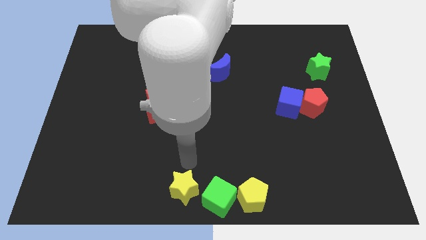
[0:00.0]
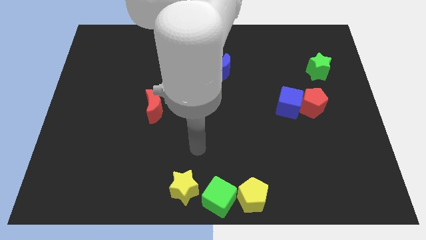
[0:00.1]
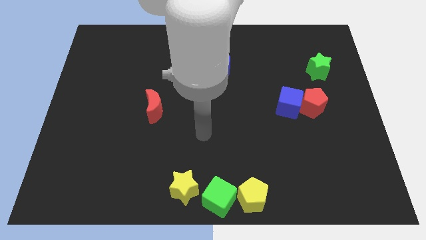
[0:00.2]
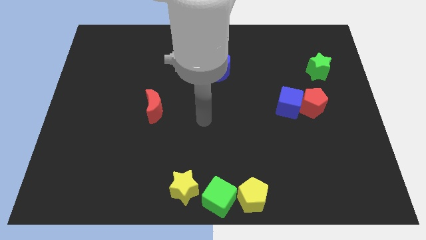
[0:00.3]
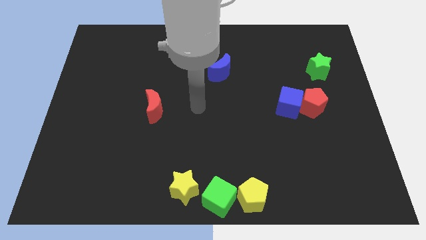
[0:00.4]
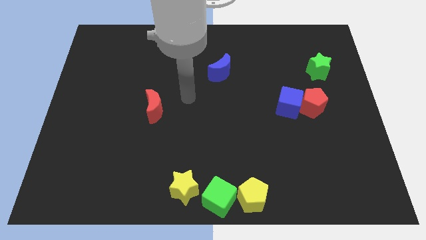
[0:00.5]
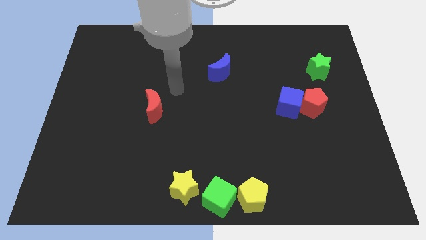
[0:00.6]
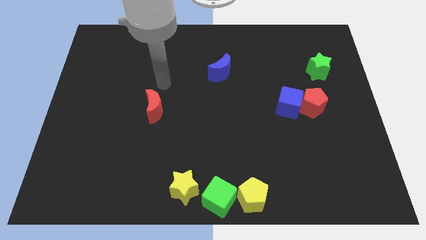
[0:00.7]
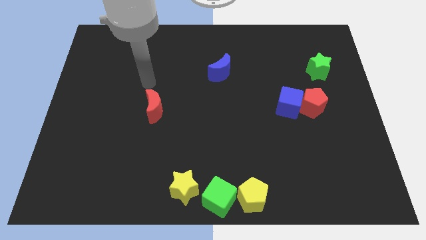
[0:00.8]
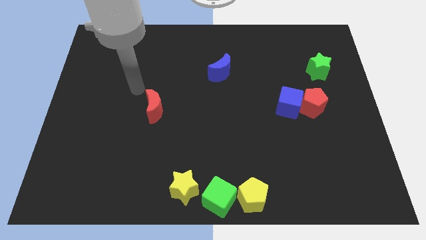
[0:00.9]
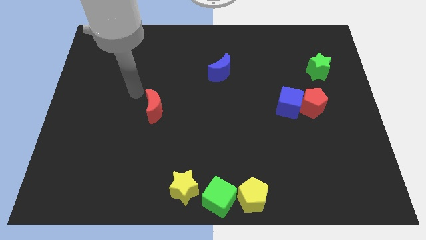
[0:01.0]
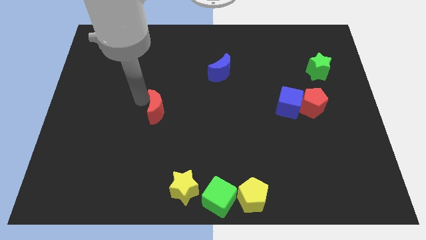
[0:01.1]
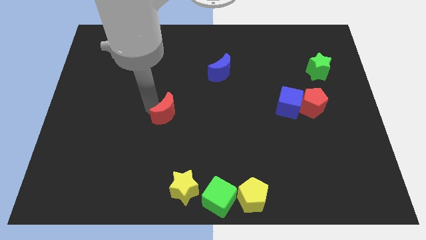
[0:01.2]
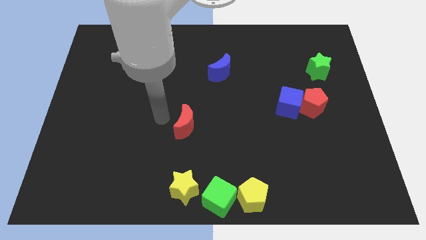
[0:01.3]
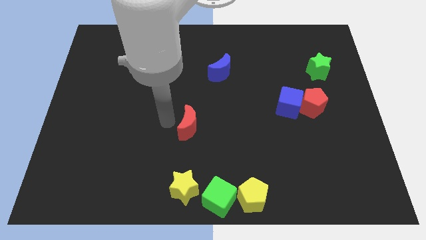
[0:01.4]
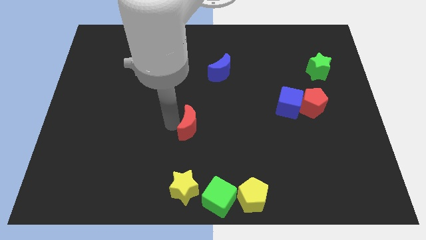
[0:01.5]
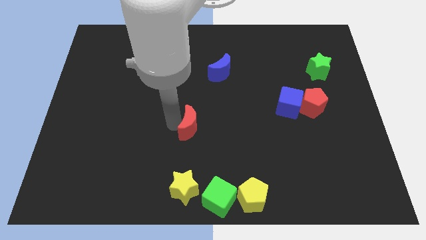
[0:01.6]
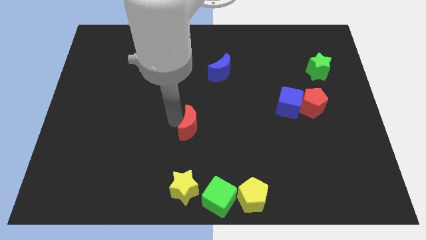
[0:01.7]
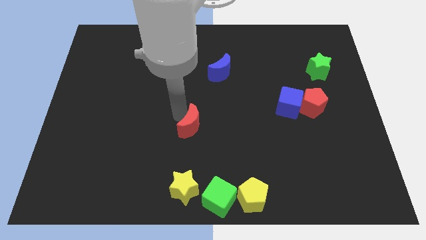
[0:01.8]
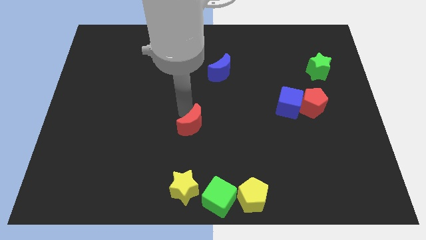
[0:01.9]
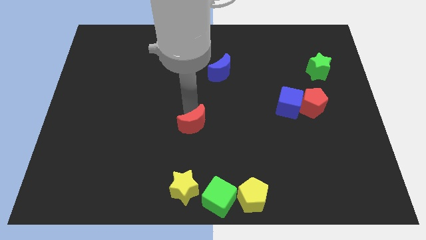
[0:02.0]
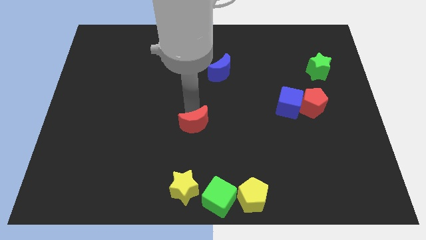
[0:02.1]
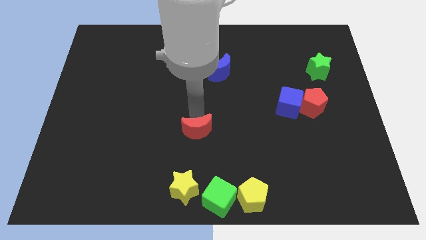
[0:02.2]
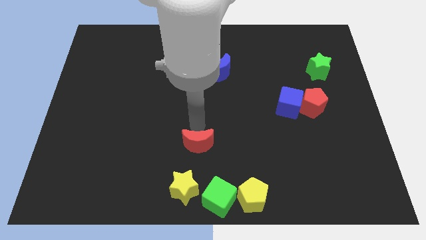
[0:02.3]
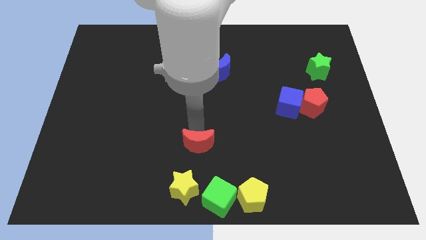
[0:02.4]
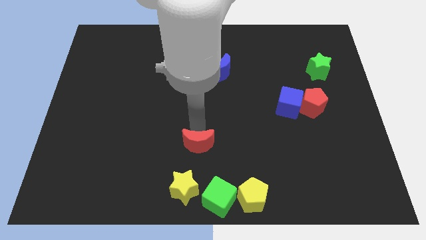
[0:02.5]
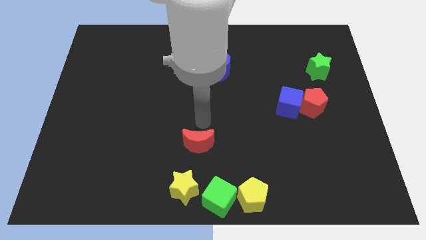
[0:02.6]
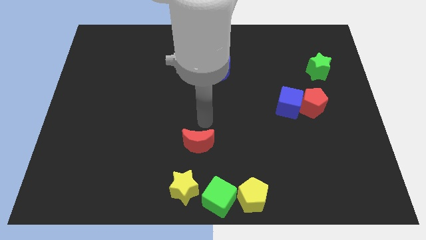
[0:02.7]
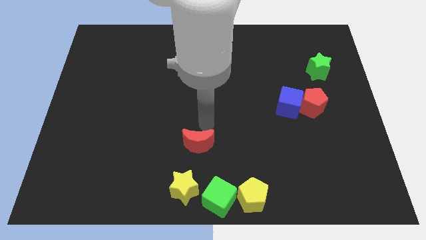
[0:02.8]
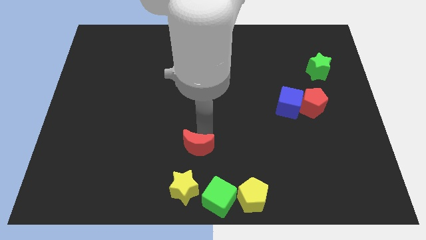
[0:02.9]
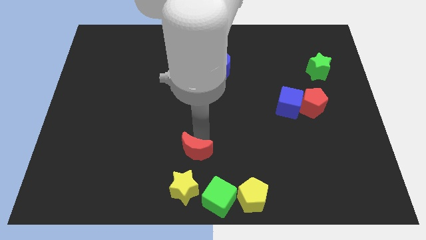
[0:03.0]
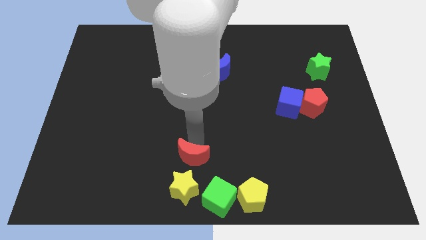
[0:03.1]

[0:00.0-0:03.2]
place the red crescent above the yellow star

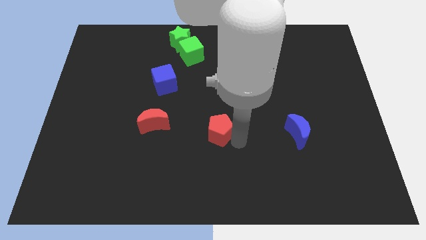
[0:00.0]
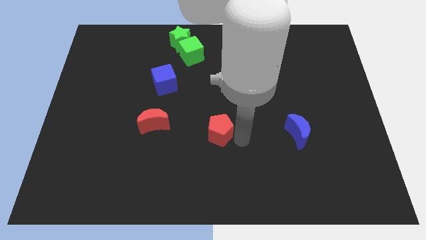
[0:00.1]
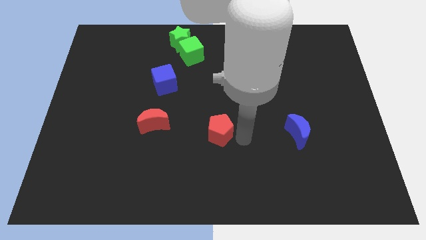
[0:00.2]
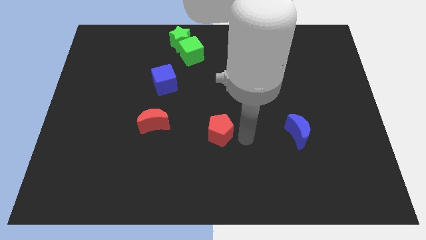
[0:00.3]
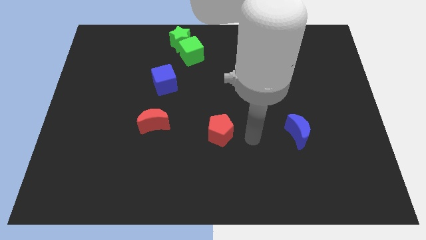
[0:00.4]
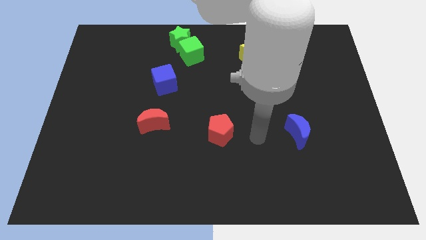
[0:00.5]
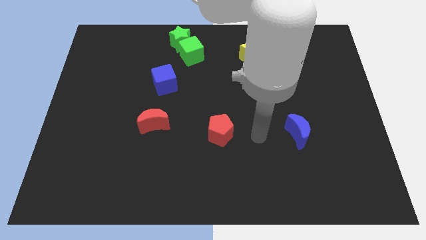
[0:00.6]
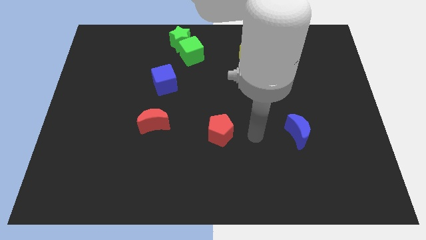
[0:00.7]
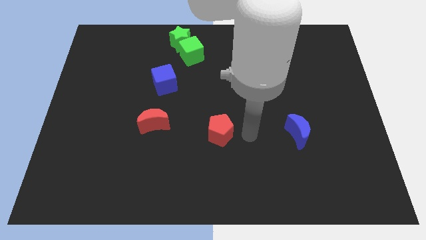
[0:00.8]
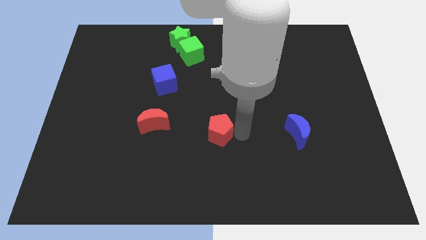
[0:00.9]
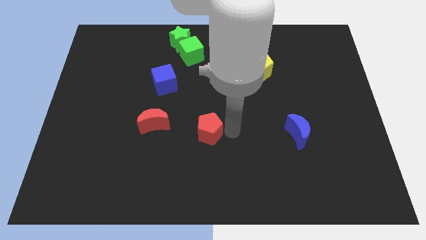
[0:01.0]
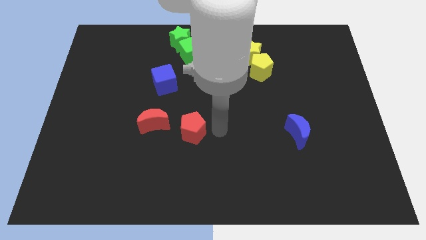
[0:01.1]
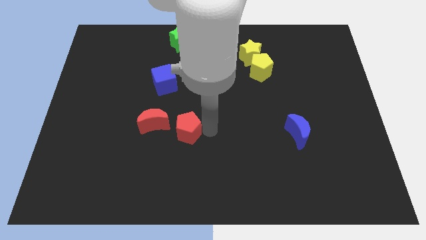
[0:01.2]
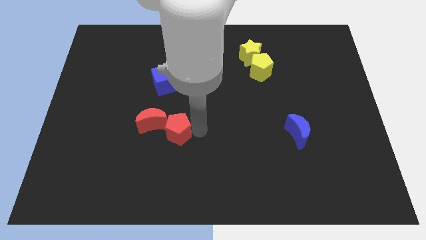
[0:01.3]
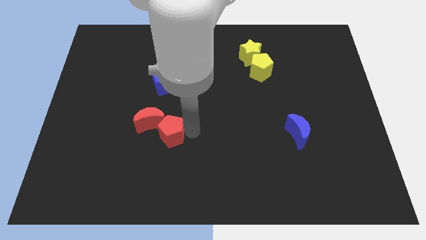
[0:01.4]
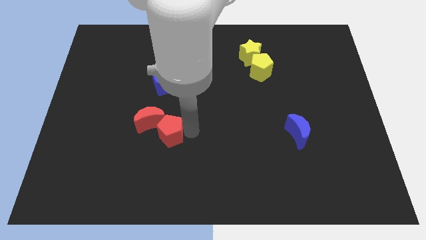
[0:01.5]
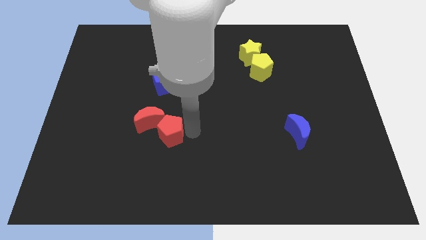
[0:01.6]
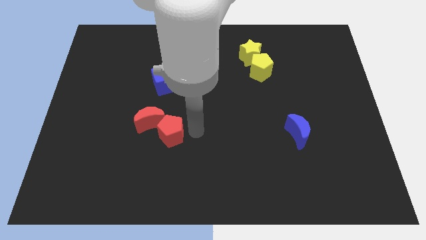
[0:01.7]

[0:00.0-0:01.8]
push the red pentagon into red crescent

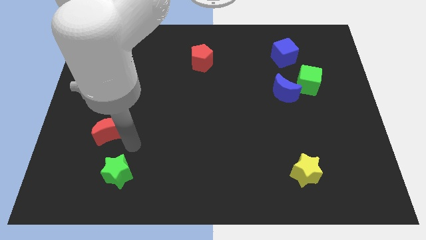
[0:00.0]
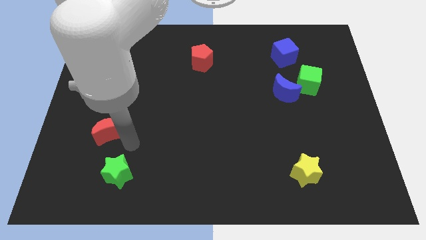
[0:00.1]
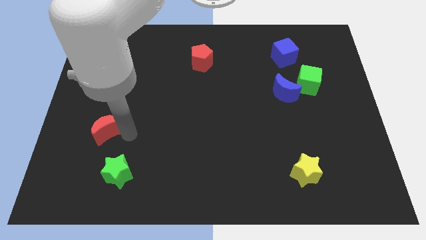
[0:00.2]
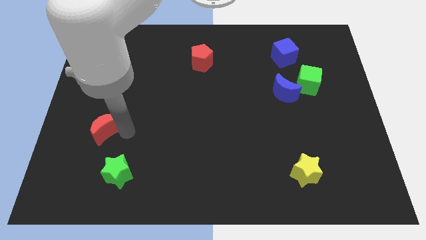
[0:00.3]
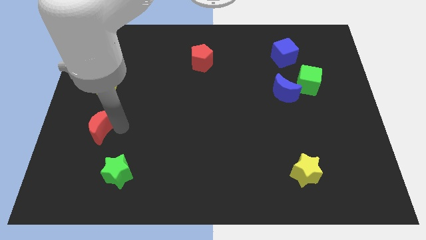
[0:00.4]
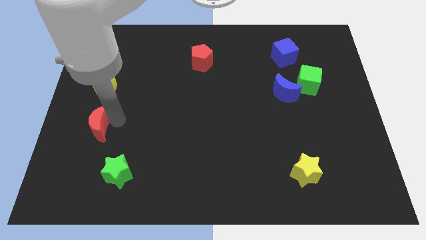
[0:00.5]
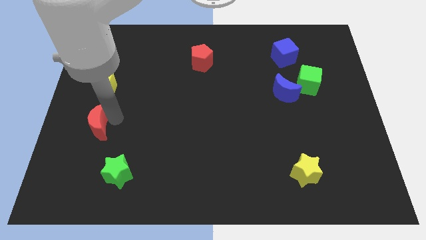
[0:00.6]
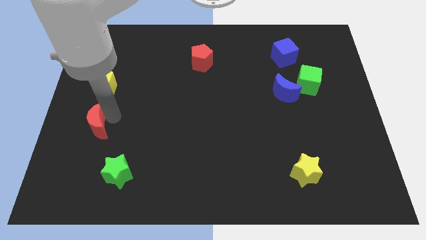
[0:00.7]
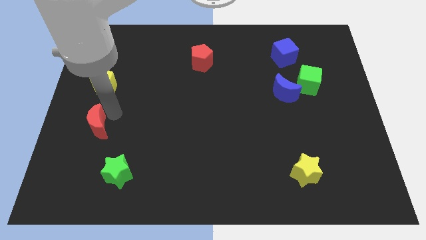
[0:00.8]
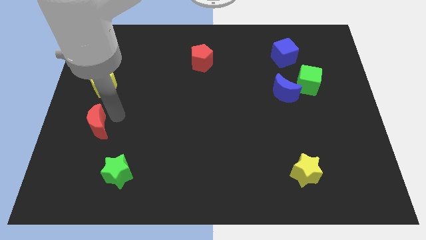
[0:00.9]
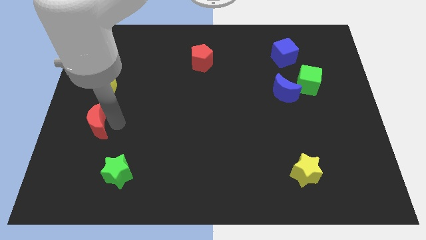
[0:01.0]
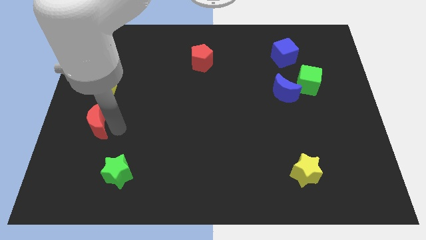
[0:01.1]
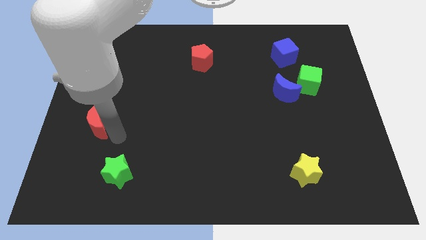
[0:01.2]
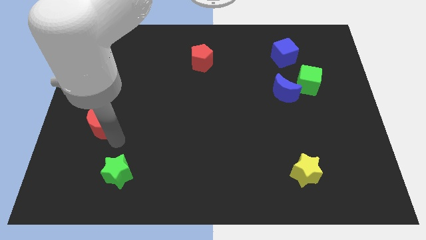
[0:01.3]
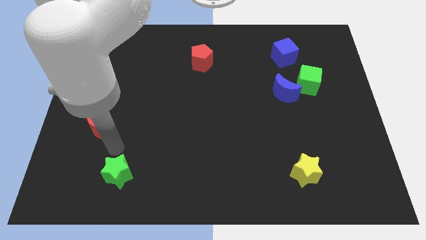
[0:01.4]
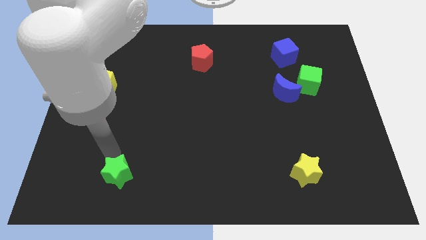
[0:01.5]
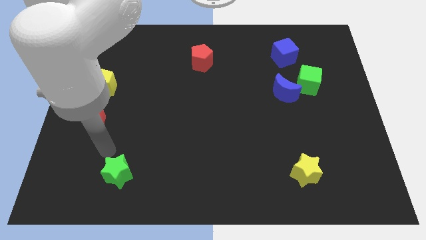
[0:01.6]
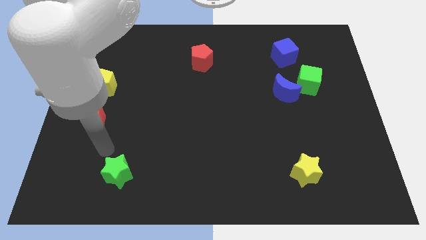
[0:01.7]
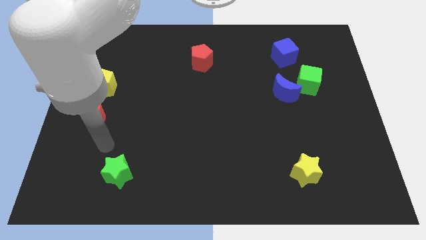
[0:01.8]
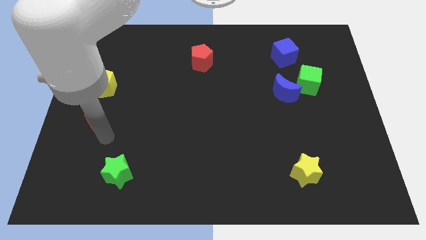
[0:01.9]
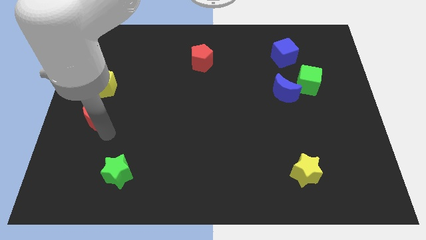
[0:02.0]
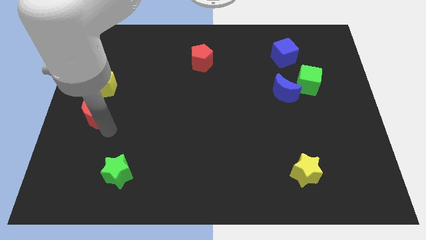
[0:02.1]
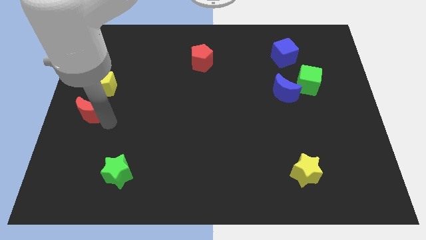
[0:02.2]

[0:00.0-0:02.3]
push the red crescent up slightly

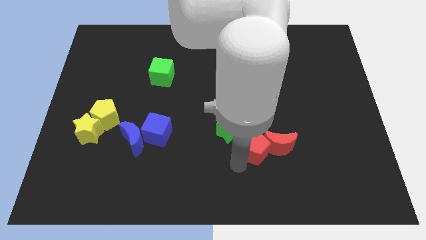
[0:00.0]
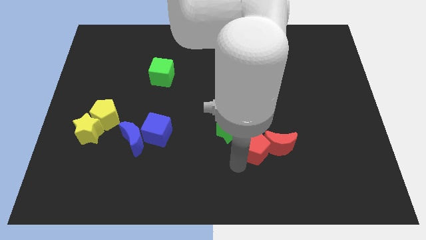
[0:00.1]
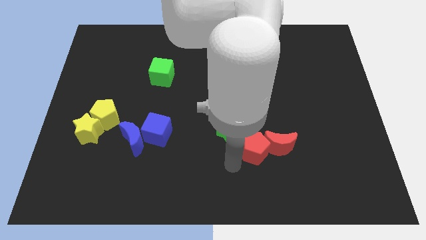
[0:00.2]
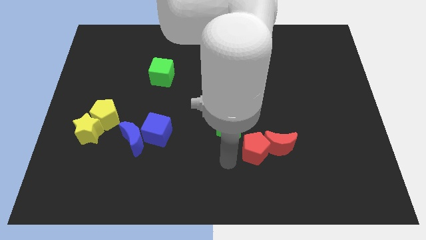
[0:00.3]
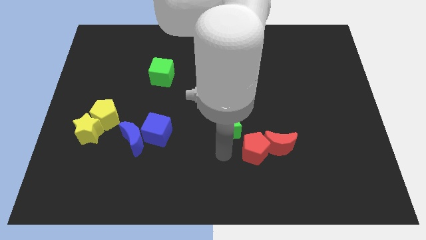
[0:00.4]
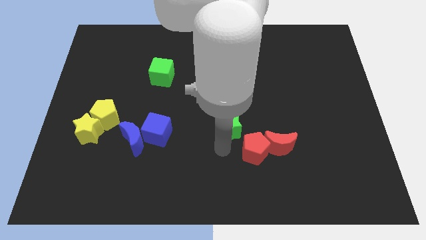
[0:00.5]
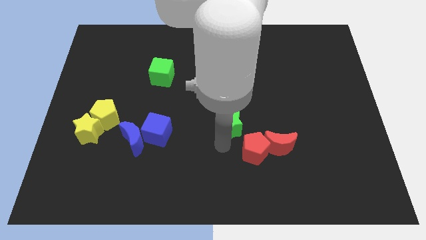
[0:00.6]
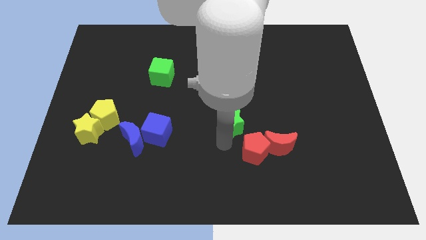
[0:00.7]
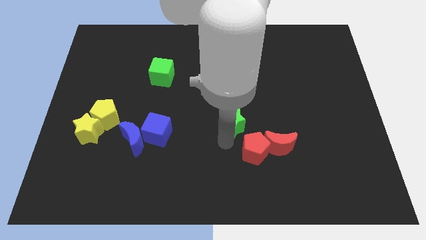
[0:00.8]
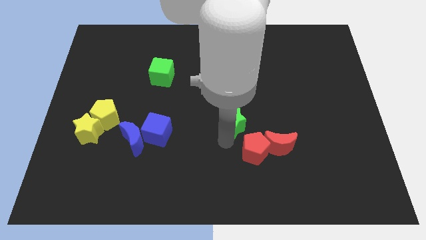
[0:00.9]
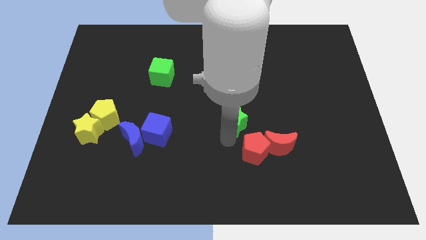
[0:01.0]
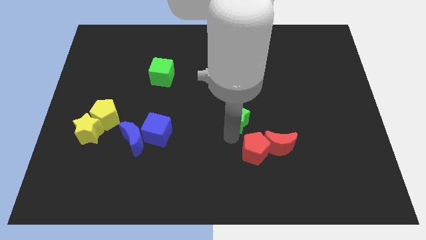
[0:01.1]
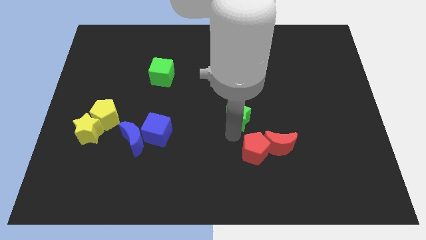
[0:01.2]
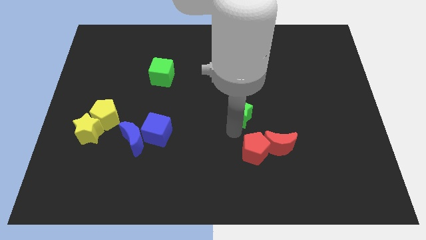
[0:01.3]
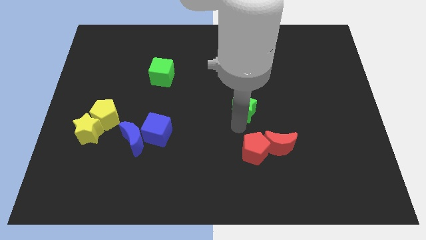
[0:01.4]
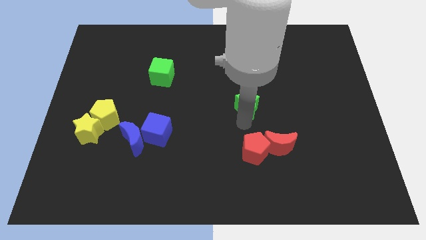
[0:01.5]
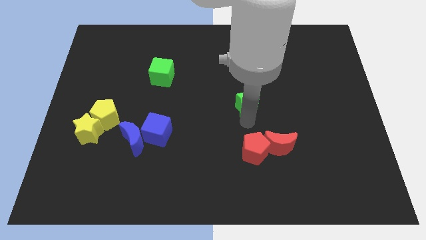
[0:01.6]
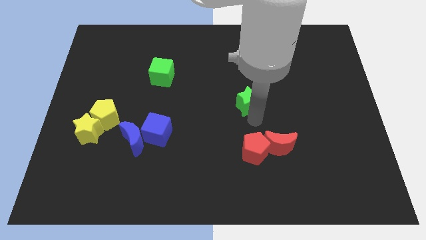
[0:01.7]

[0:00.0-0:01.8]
move the green star to the top of the red pentagon

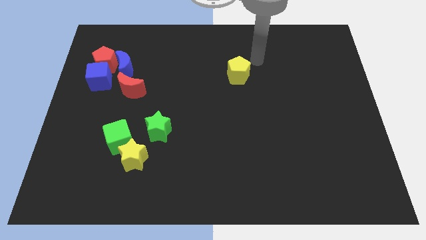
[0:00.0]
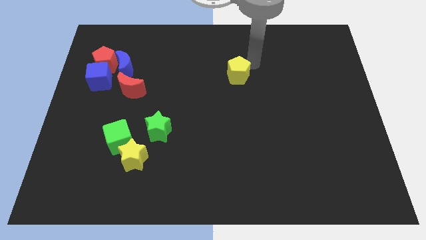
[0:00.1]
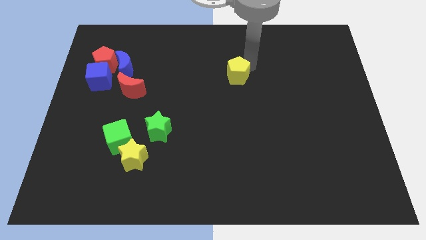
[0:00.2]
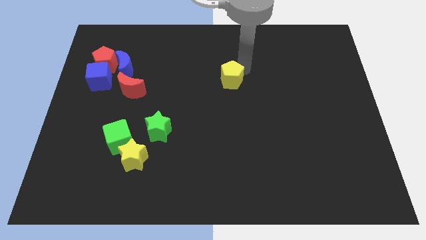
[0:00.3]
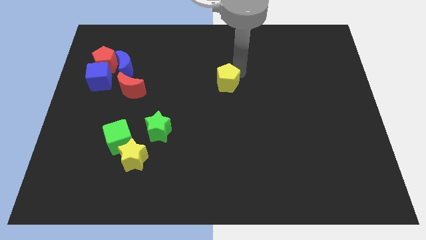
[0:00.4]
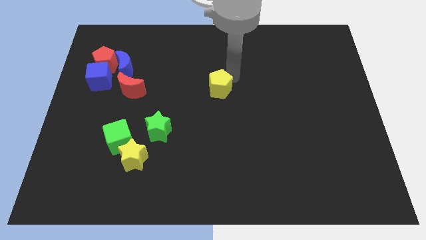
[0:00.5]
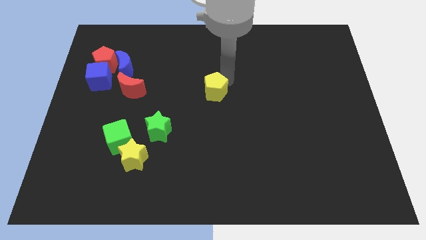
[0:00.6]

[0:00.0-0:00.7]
push yellow pentagon slightly towards down
